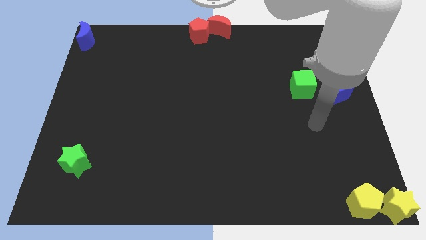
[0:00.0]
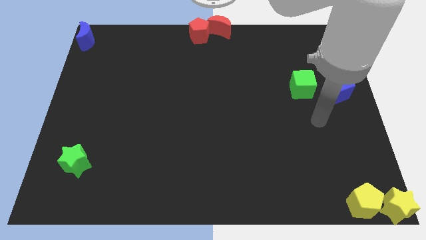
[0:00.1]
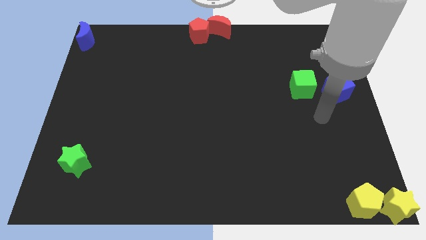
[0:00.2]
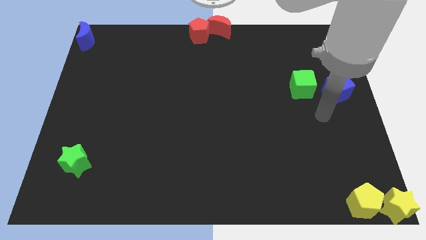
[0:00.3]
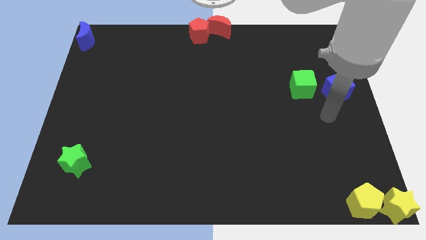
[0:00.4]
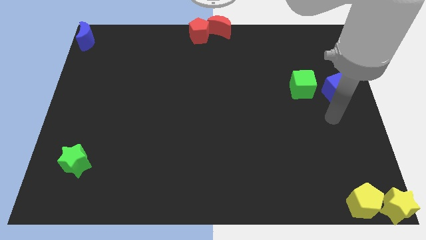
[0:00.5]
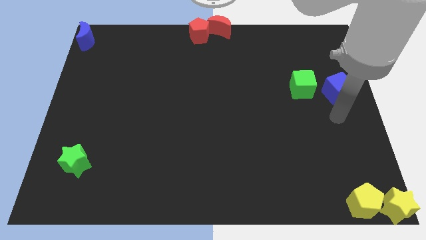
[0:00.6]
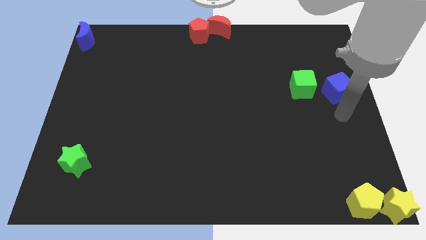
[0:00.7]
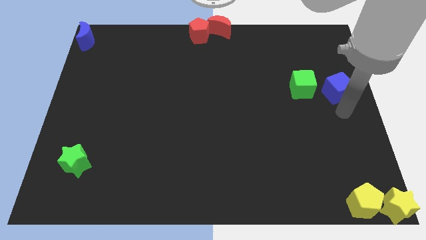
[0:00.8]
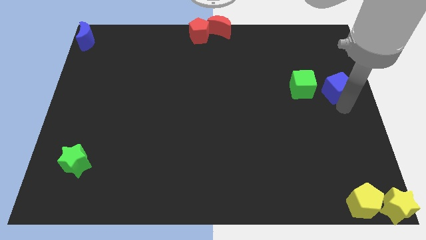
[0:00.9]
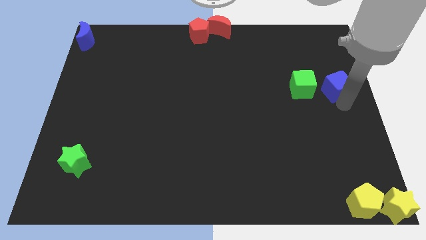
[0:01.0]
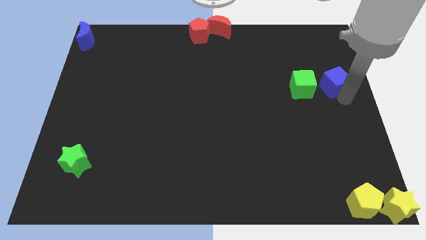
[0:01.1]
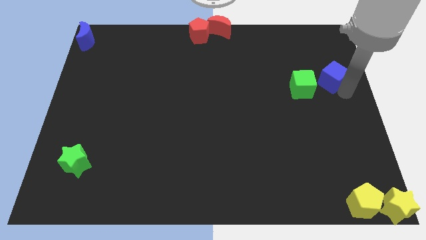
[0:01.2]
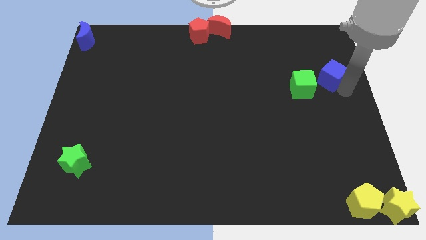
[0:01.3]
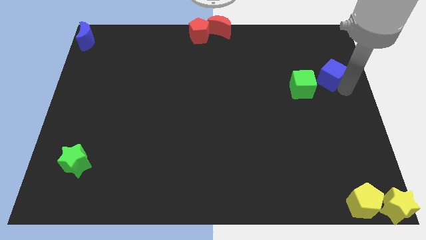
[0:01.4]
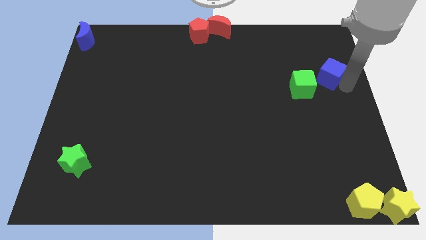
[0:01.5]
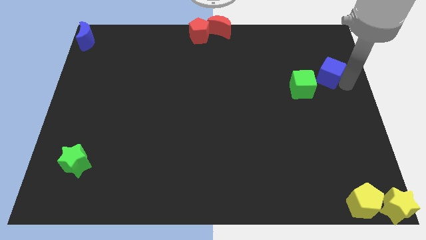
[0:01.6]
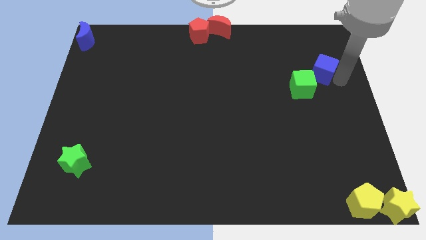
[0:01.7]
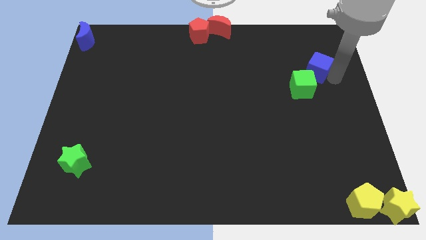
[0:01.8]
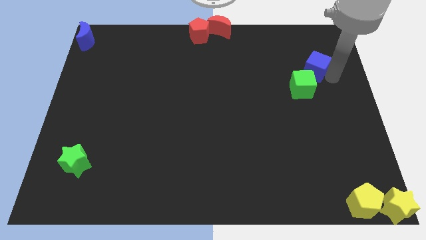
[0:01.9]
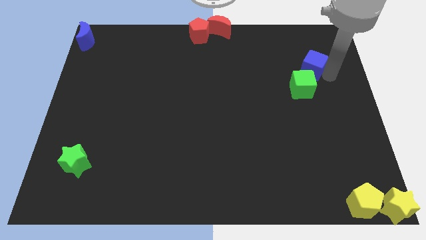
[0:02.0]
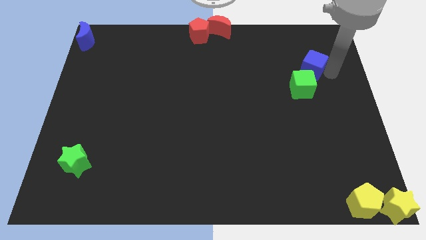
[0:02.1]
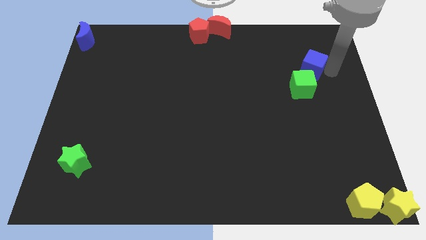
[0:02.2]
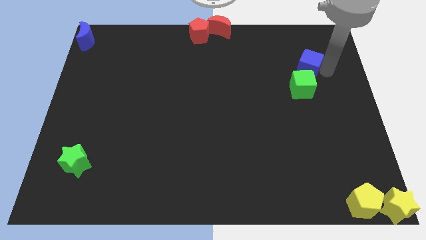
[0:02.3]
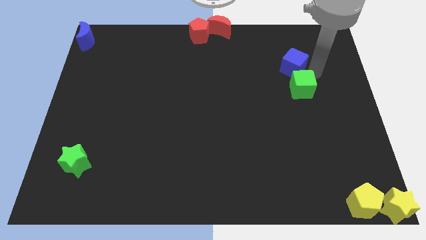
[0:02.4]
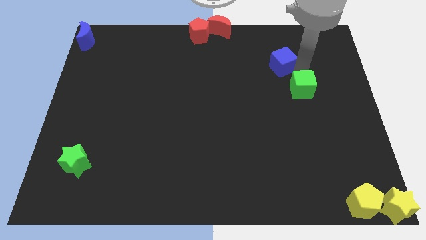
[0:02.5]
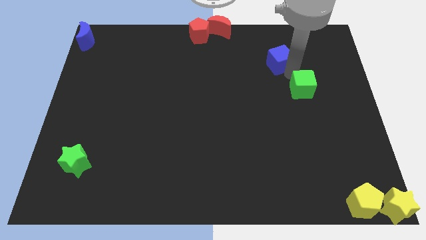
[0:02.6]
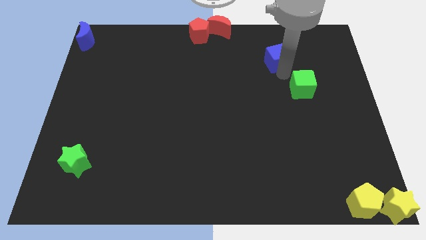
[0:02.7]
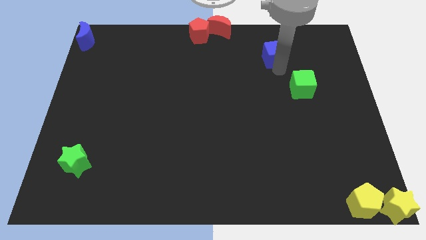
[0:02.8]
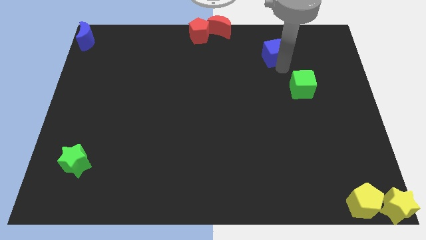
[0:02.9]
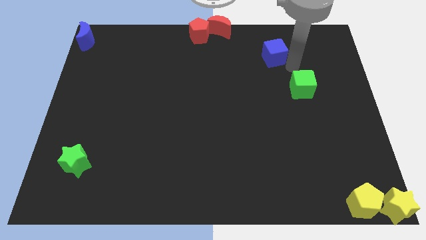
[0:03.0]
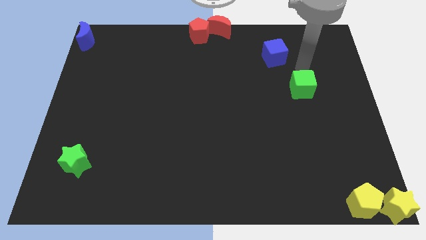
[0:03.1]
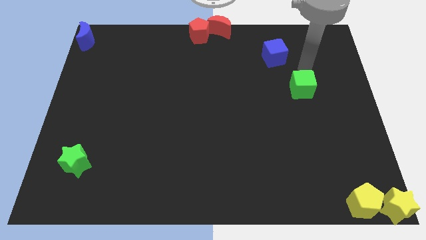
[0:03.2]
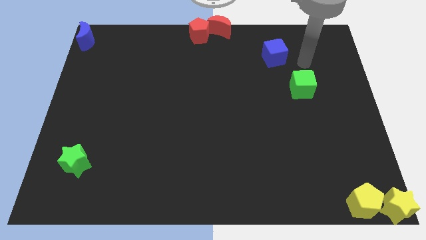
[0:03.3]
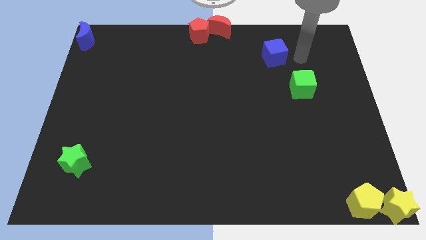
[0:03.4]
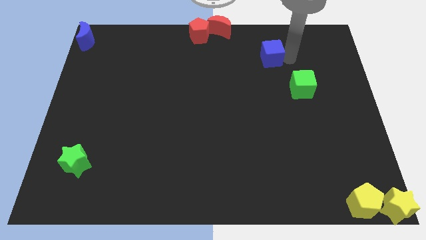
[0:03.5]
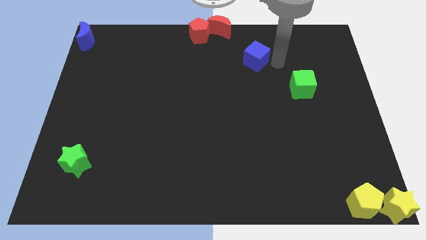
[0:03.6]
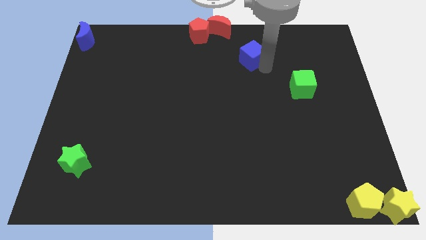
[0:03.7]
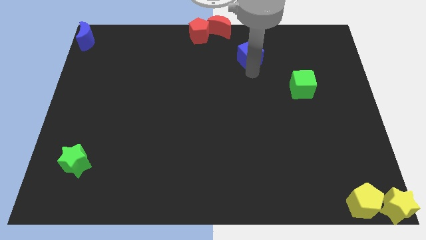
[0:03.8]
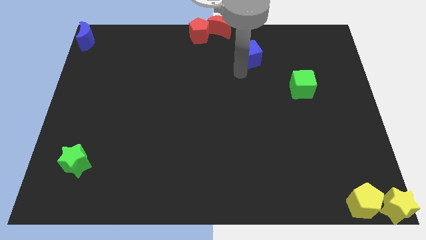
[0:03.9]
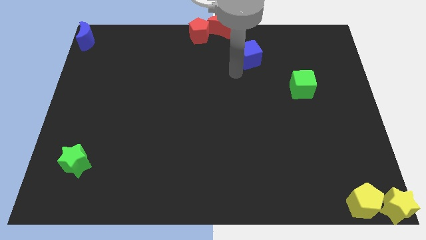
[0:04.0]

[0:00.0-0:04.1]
separate blue cube from green cube

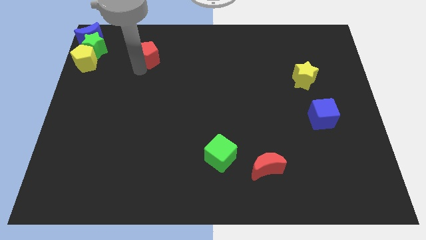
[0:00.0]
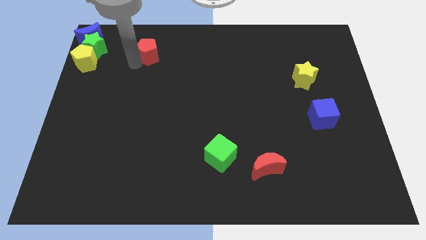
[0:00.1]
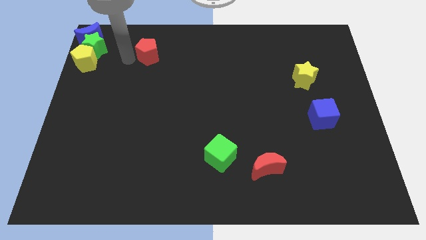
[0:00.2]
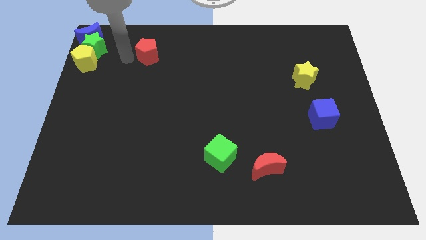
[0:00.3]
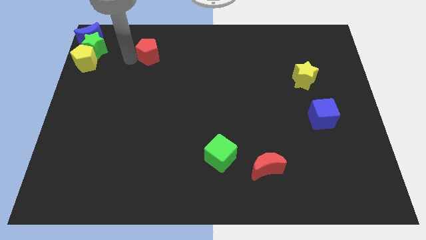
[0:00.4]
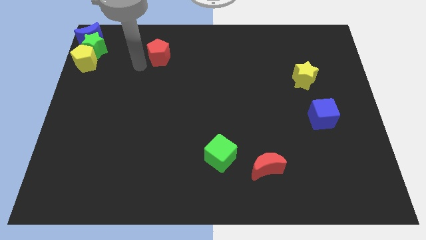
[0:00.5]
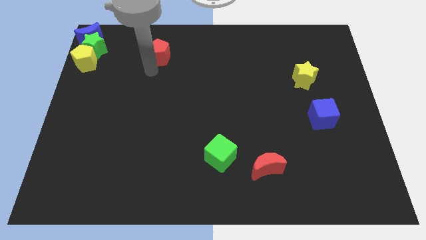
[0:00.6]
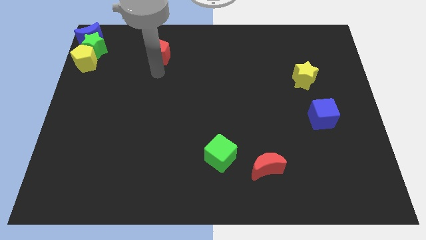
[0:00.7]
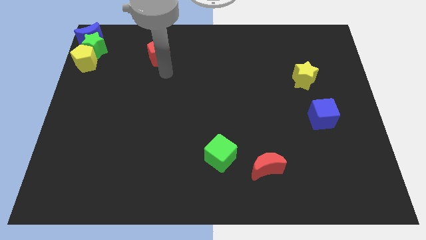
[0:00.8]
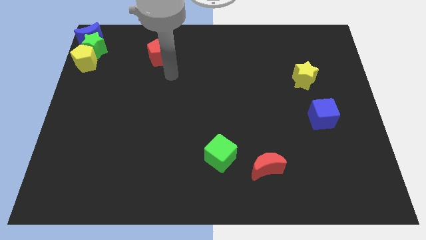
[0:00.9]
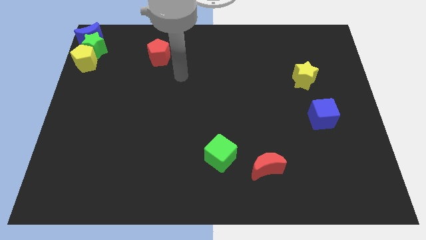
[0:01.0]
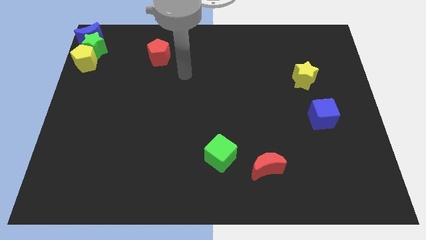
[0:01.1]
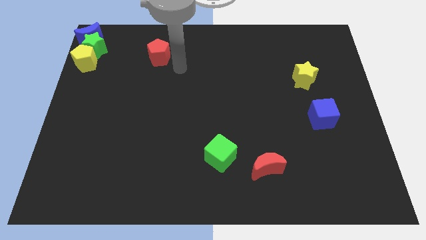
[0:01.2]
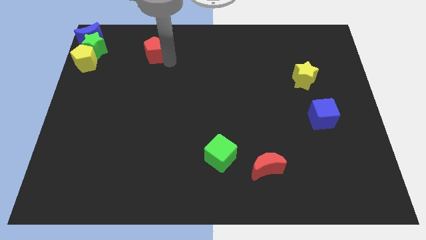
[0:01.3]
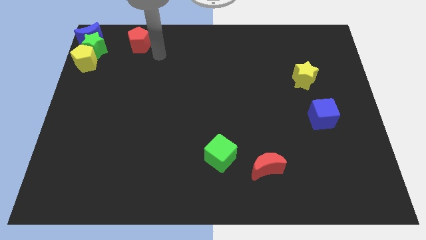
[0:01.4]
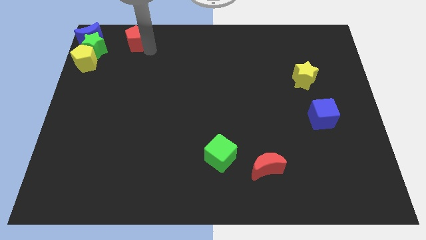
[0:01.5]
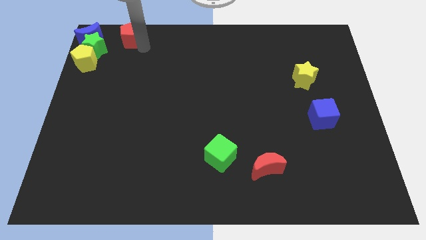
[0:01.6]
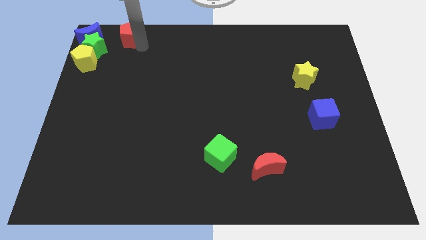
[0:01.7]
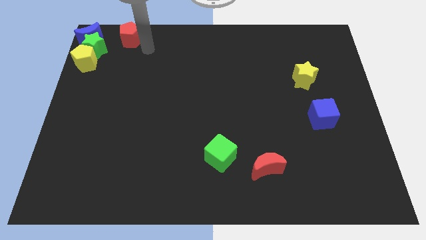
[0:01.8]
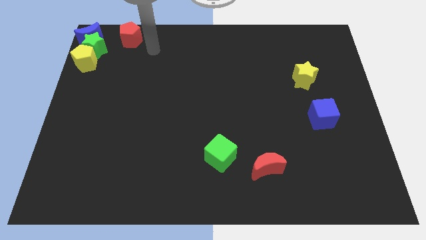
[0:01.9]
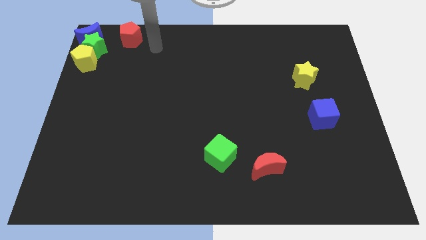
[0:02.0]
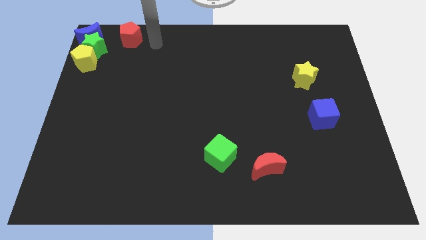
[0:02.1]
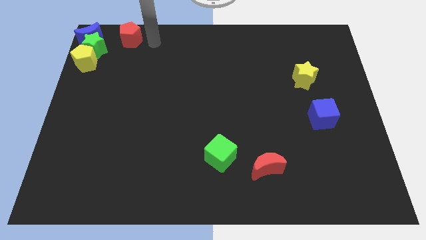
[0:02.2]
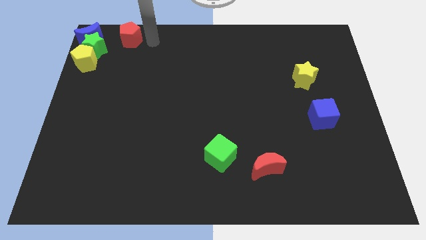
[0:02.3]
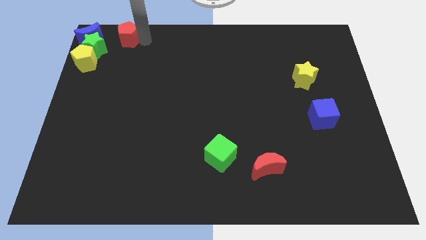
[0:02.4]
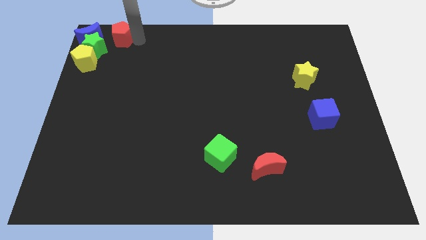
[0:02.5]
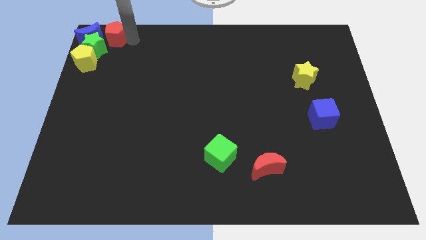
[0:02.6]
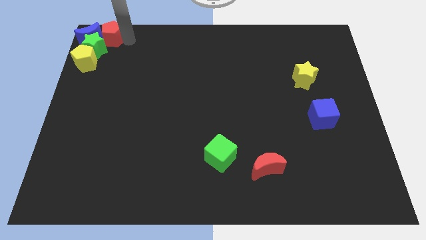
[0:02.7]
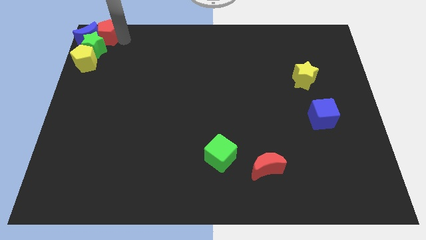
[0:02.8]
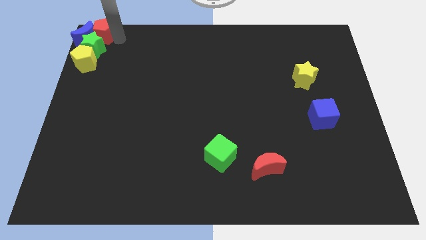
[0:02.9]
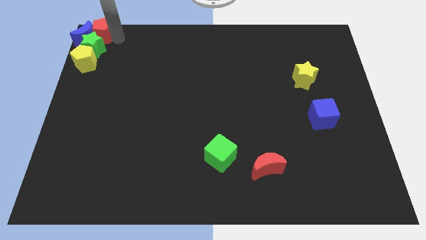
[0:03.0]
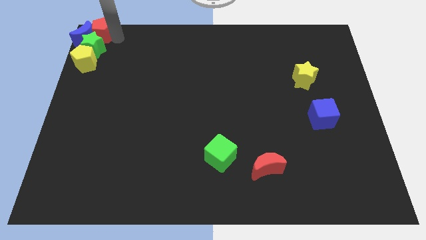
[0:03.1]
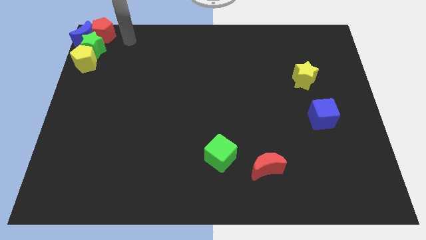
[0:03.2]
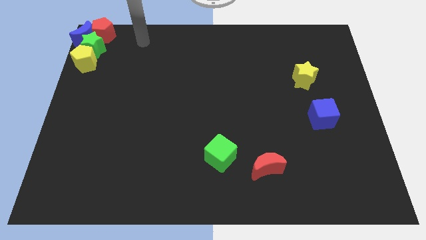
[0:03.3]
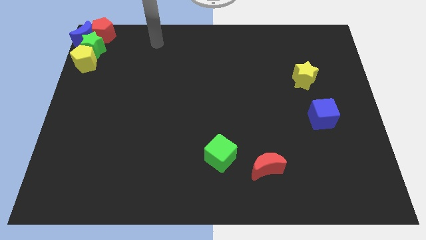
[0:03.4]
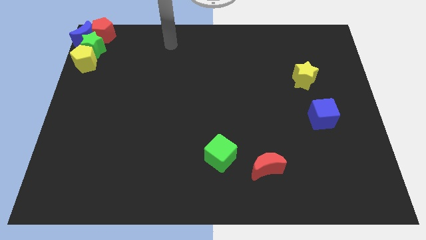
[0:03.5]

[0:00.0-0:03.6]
push the red pentagon into the group

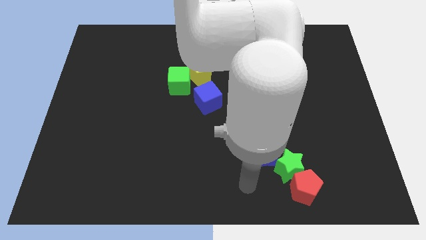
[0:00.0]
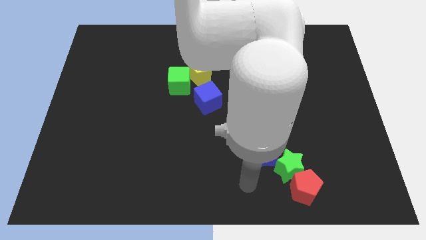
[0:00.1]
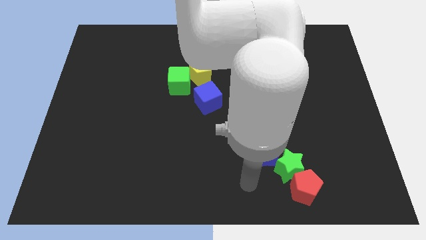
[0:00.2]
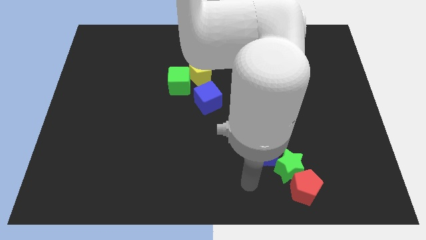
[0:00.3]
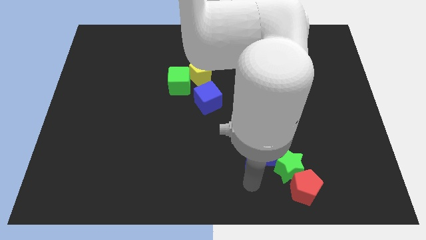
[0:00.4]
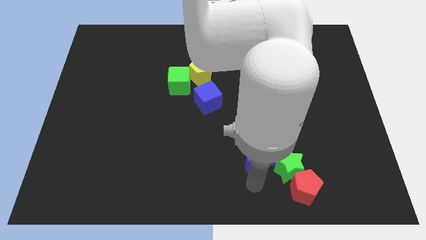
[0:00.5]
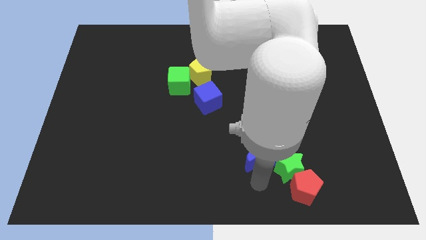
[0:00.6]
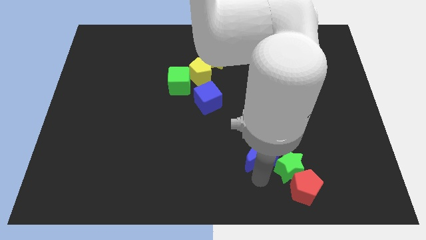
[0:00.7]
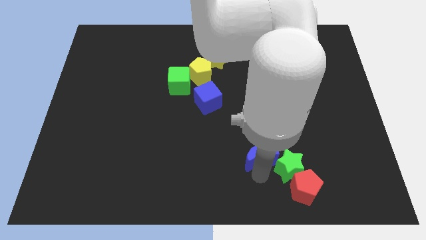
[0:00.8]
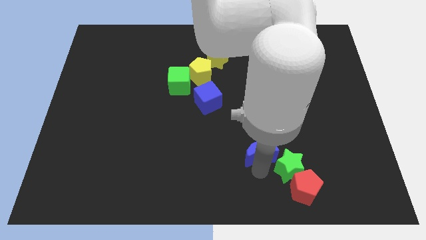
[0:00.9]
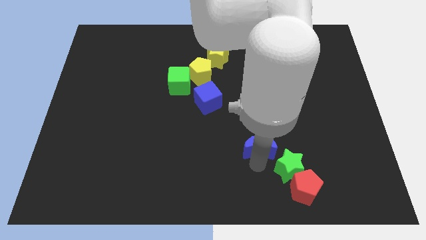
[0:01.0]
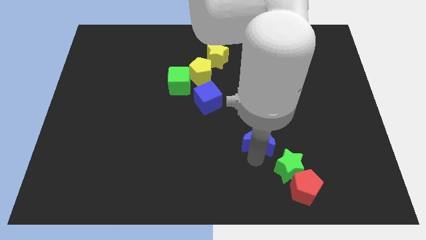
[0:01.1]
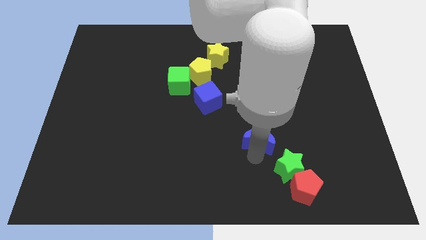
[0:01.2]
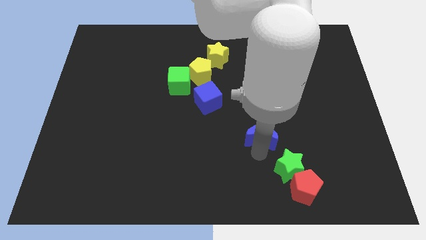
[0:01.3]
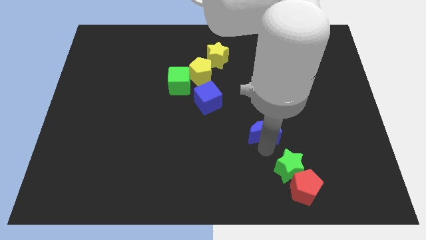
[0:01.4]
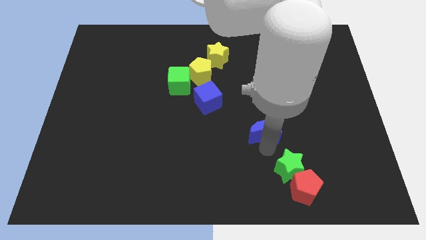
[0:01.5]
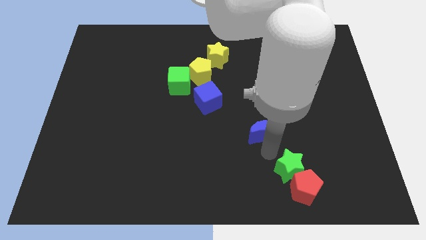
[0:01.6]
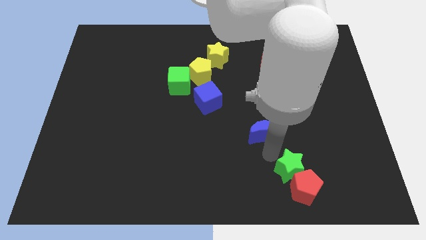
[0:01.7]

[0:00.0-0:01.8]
separate the blue moon from the green star
